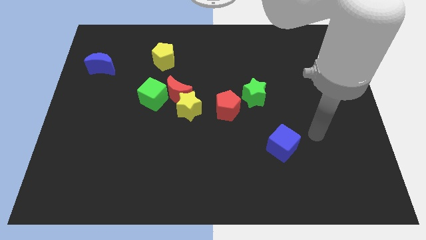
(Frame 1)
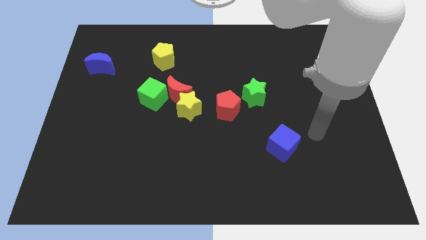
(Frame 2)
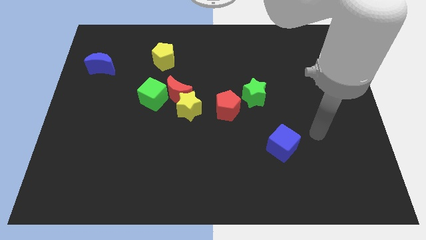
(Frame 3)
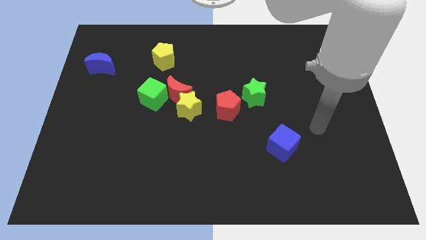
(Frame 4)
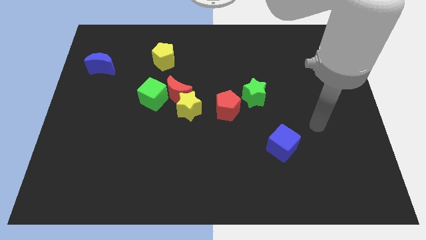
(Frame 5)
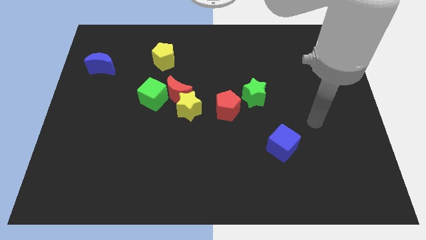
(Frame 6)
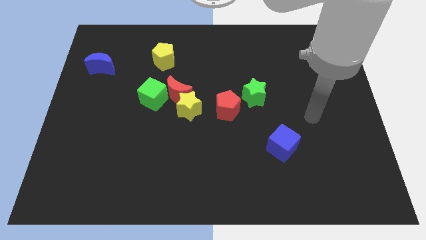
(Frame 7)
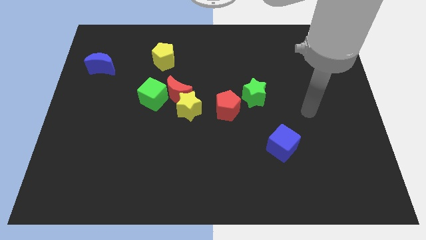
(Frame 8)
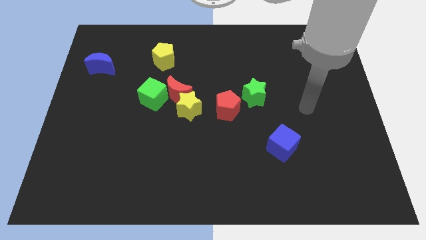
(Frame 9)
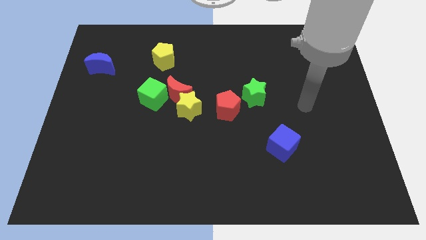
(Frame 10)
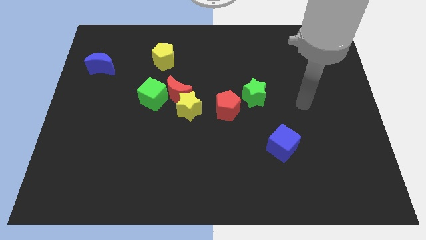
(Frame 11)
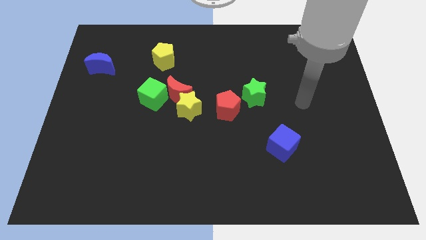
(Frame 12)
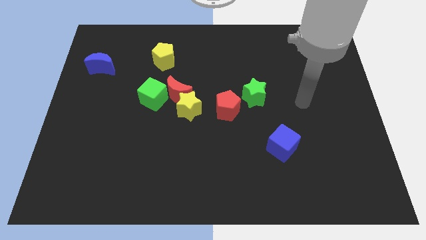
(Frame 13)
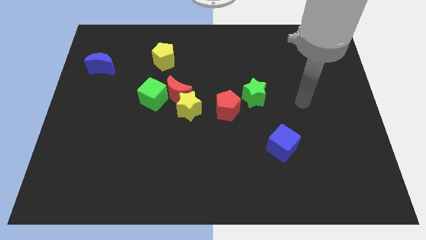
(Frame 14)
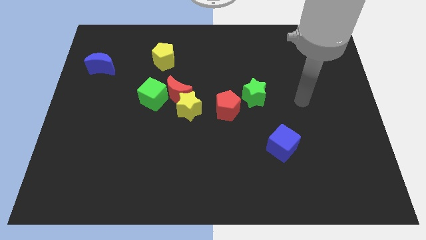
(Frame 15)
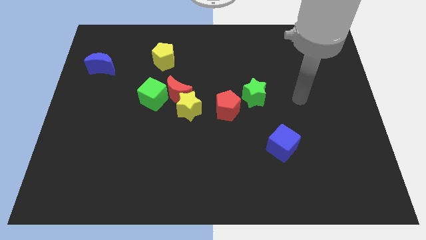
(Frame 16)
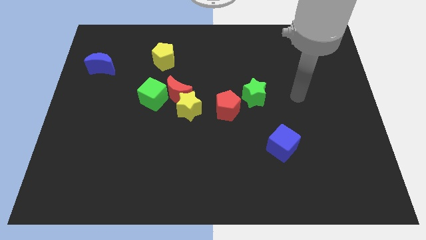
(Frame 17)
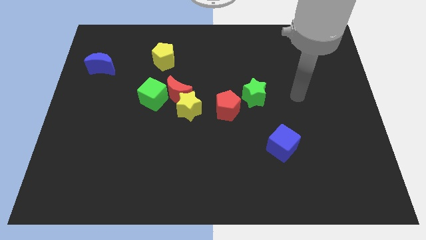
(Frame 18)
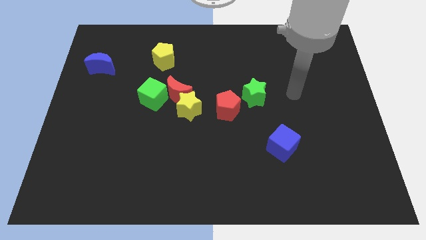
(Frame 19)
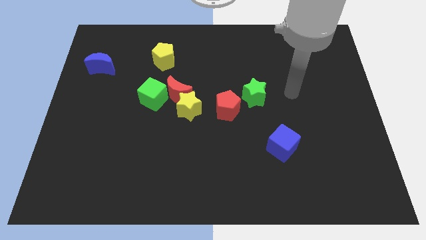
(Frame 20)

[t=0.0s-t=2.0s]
move the arm close to the green star

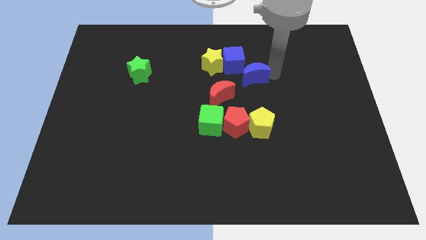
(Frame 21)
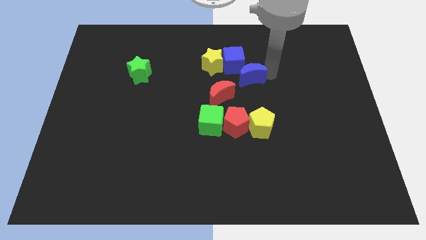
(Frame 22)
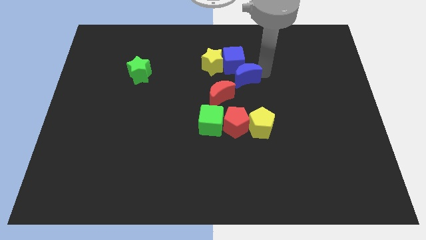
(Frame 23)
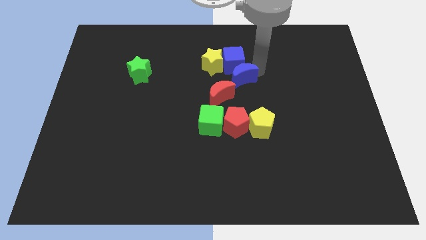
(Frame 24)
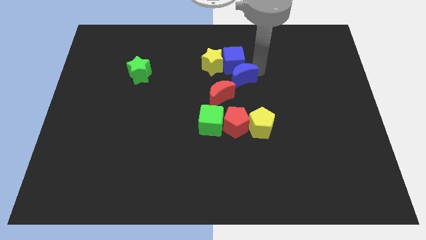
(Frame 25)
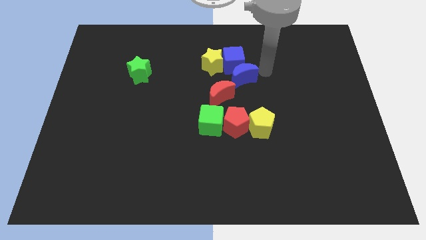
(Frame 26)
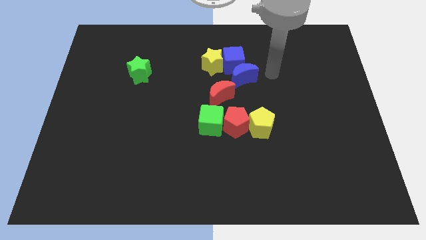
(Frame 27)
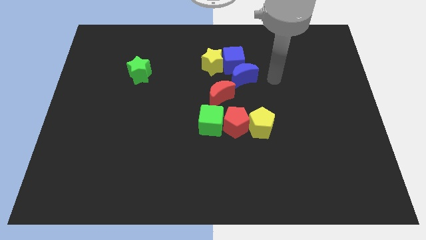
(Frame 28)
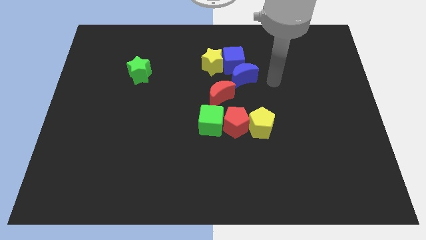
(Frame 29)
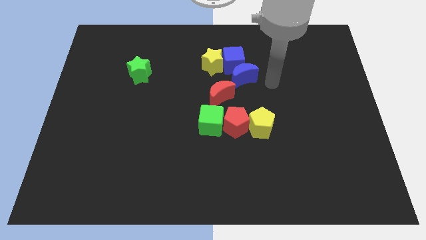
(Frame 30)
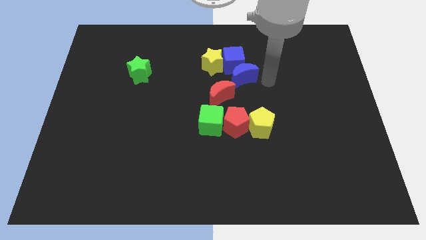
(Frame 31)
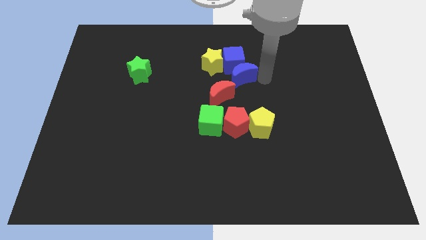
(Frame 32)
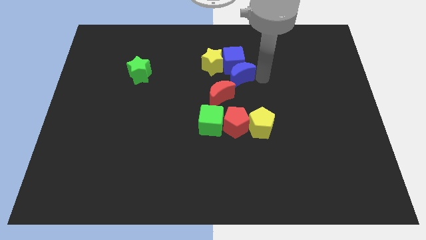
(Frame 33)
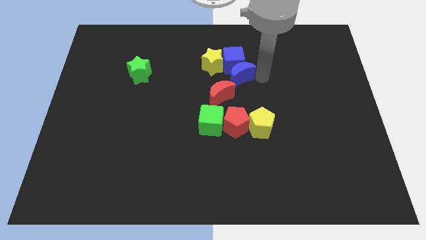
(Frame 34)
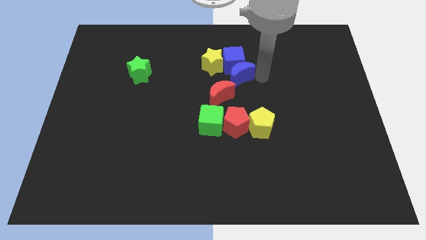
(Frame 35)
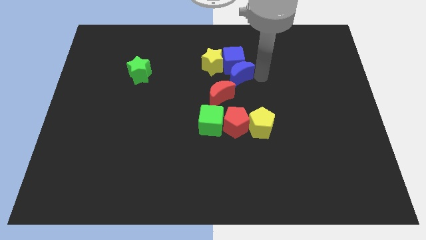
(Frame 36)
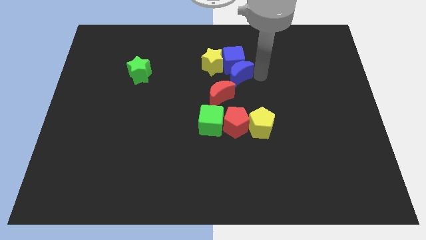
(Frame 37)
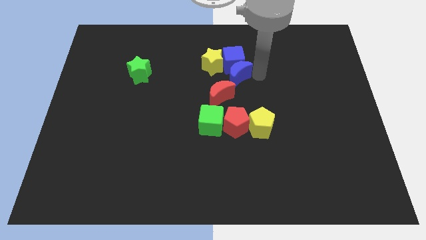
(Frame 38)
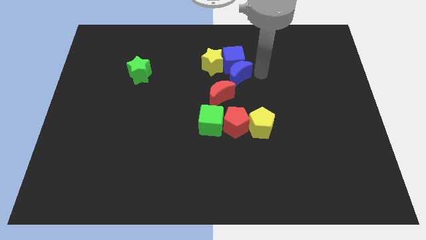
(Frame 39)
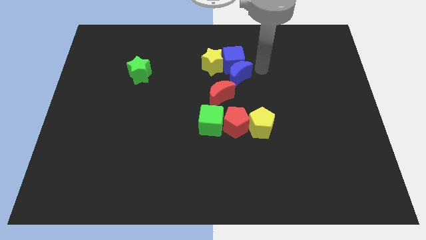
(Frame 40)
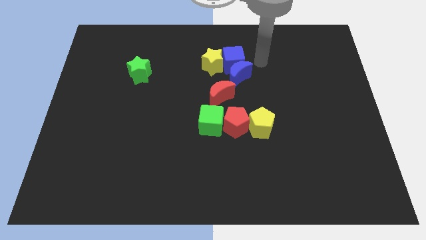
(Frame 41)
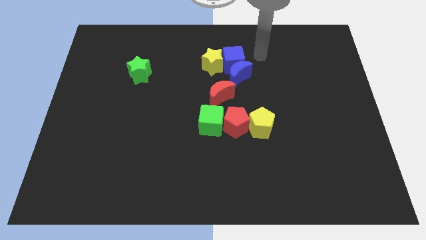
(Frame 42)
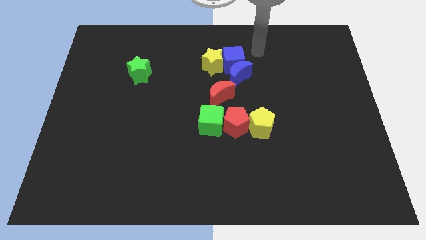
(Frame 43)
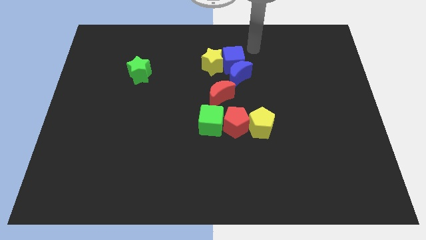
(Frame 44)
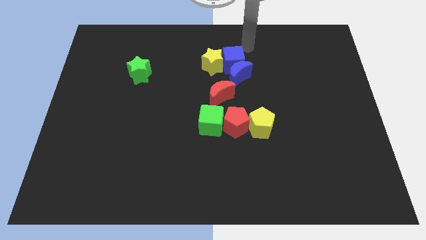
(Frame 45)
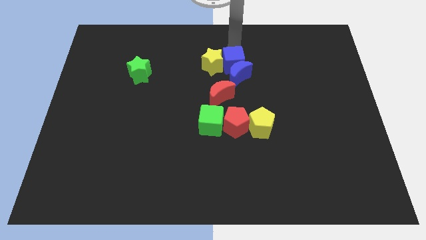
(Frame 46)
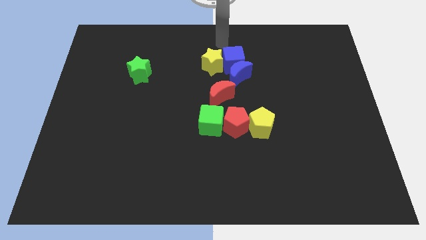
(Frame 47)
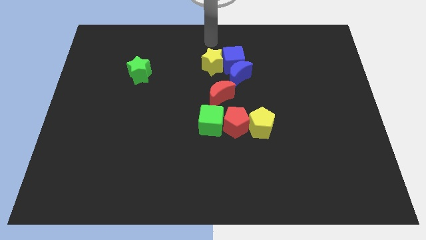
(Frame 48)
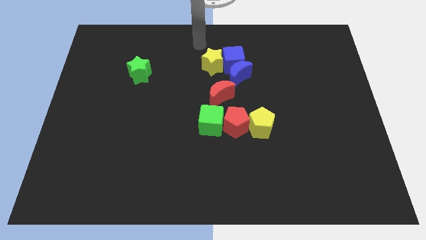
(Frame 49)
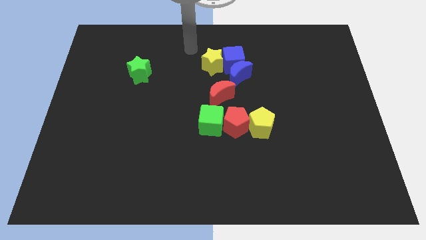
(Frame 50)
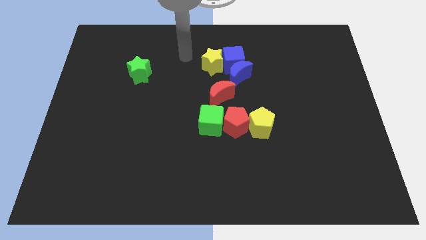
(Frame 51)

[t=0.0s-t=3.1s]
move blue moon slightly close to the blue cube

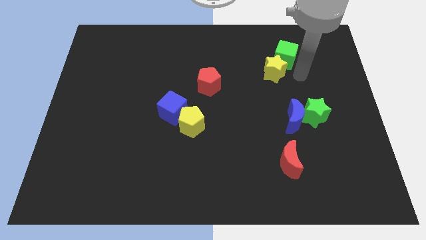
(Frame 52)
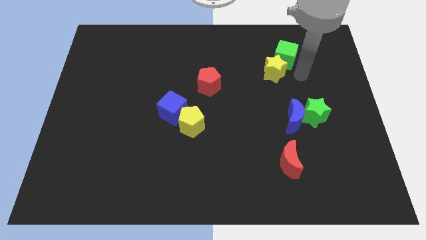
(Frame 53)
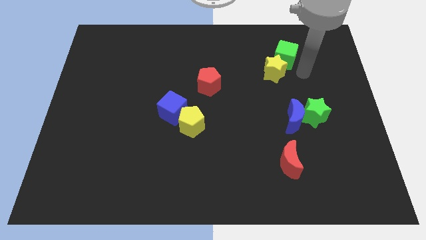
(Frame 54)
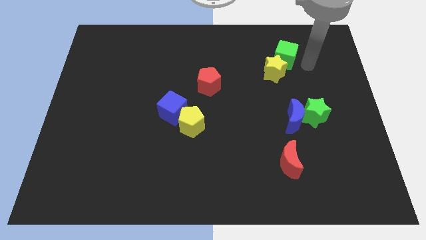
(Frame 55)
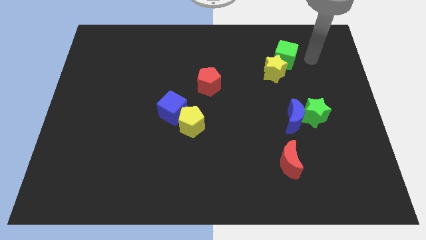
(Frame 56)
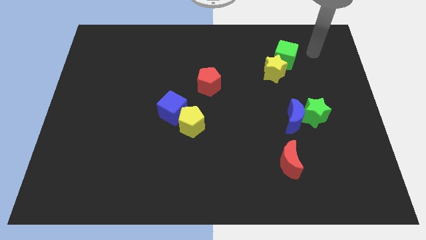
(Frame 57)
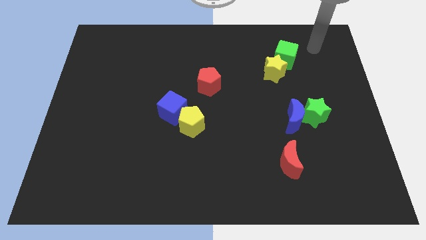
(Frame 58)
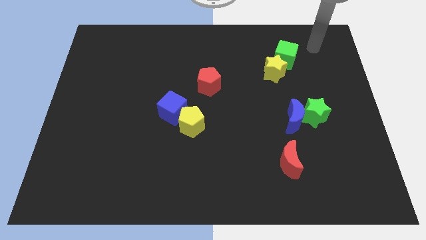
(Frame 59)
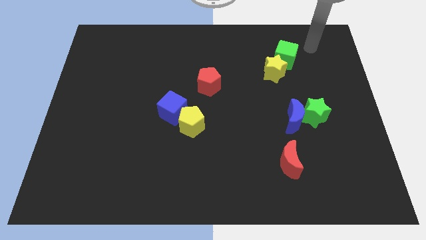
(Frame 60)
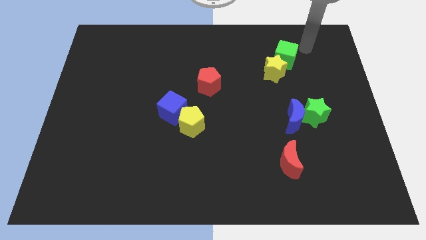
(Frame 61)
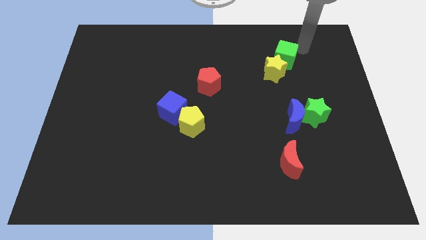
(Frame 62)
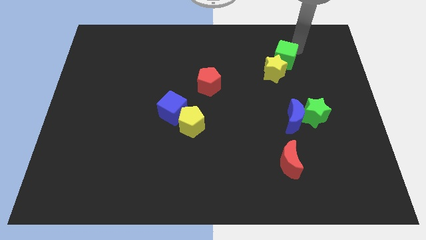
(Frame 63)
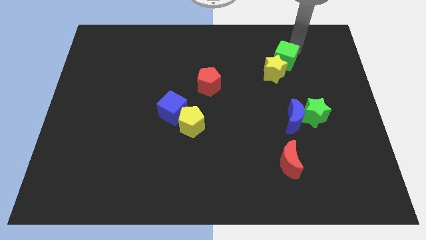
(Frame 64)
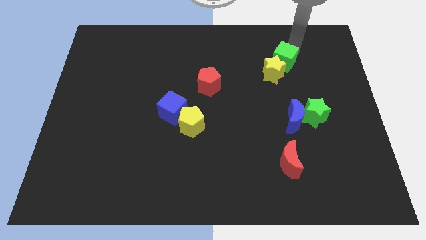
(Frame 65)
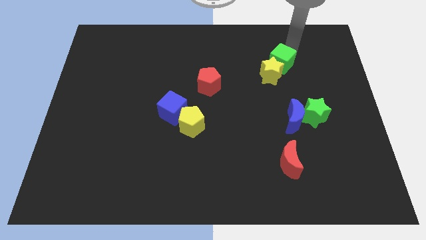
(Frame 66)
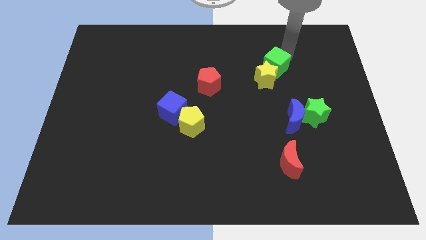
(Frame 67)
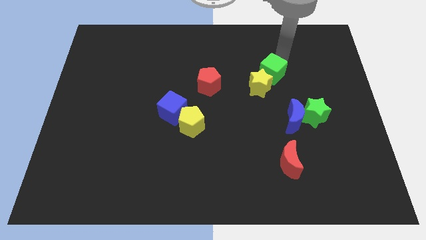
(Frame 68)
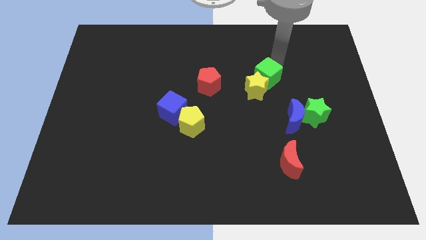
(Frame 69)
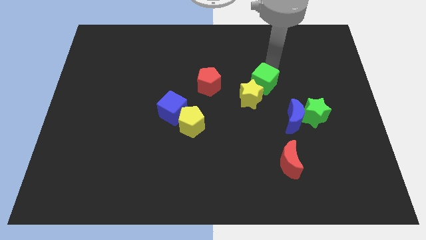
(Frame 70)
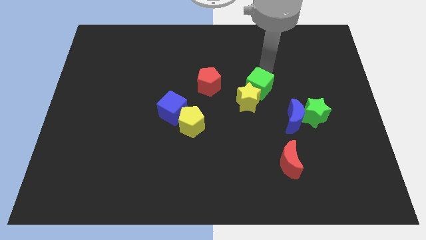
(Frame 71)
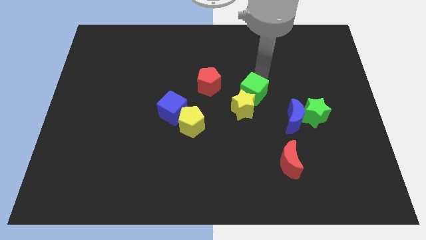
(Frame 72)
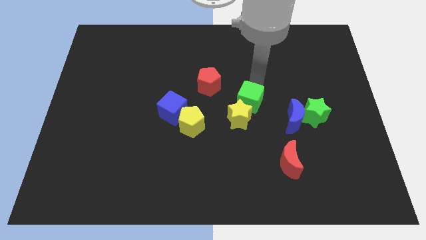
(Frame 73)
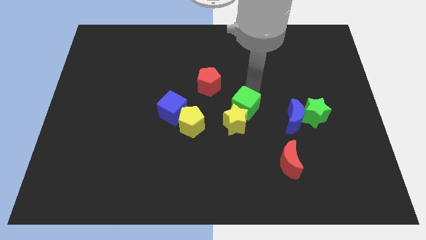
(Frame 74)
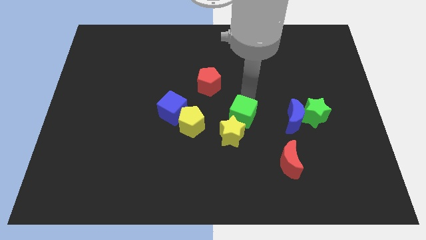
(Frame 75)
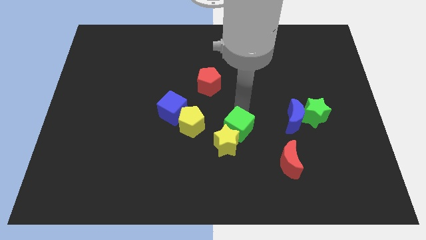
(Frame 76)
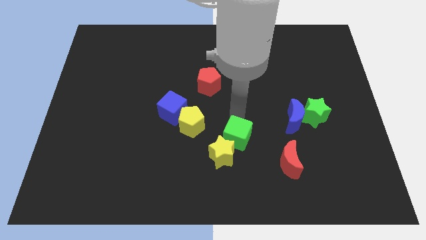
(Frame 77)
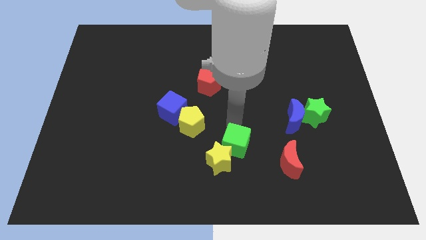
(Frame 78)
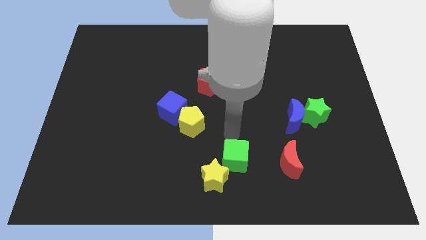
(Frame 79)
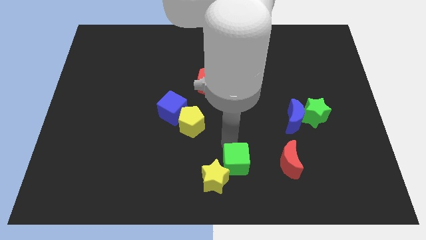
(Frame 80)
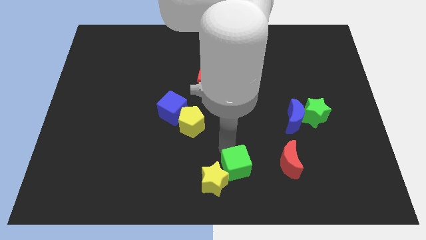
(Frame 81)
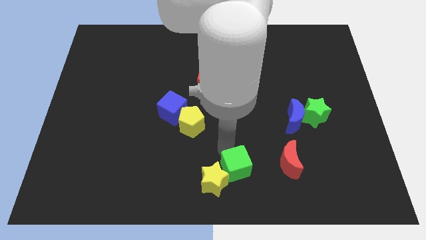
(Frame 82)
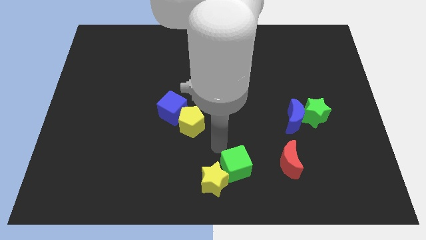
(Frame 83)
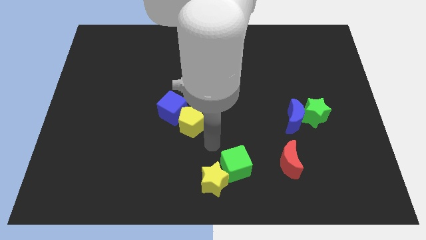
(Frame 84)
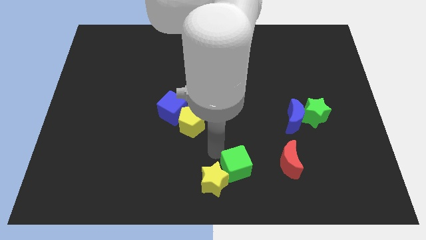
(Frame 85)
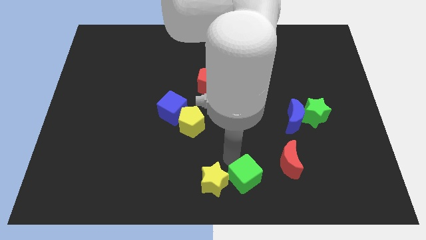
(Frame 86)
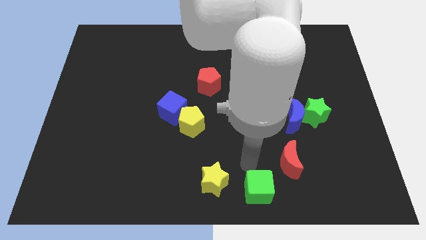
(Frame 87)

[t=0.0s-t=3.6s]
push the green cube along with the yellow star to the bottom

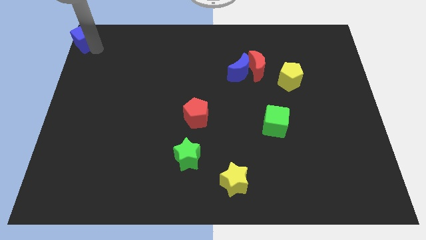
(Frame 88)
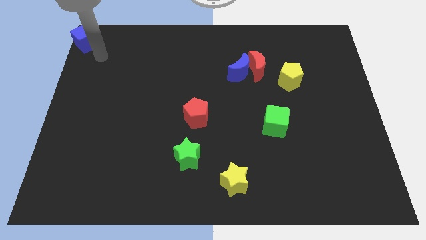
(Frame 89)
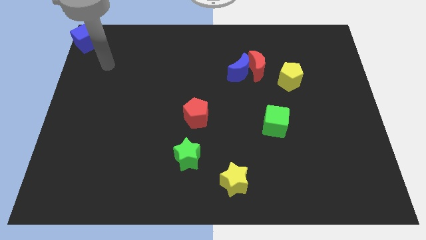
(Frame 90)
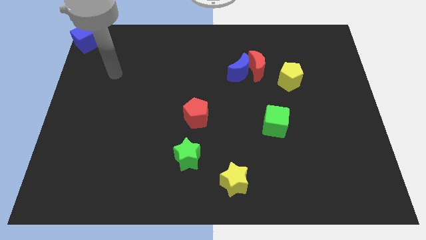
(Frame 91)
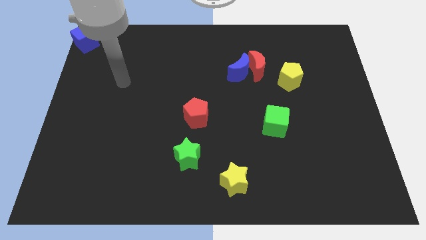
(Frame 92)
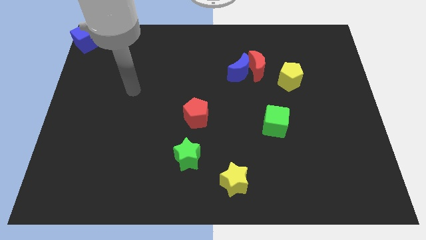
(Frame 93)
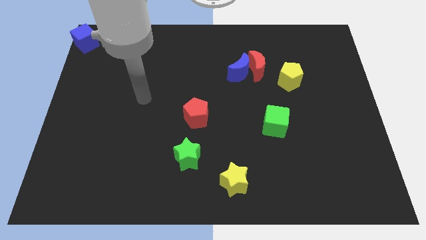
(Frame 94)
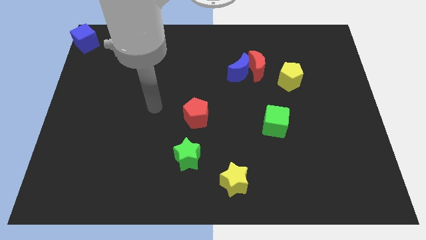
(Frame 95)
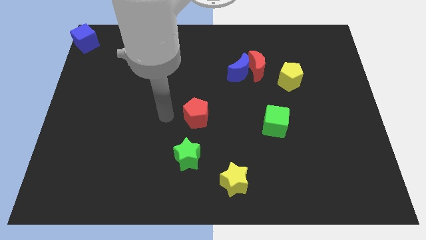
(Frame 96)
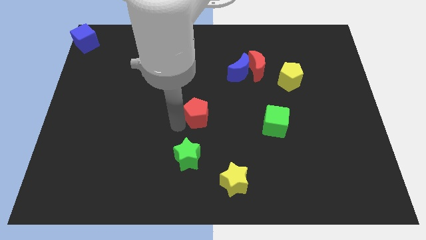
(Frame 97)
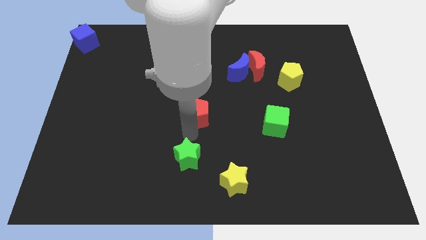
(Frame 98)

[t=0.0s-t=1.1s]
move your arm away from the blue cube
